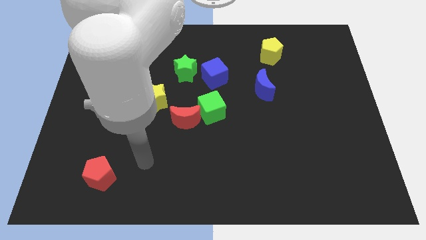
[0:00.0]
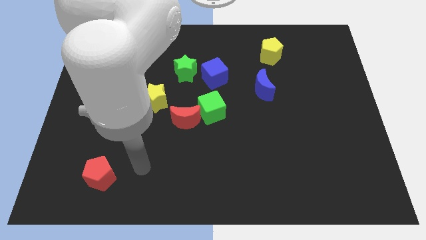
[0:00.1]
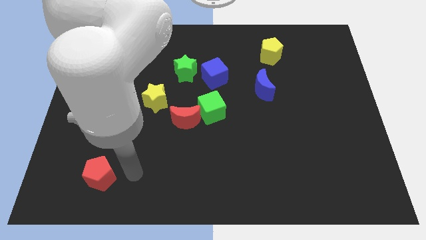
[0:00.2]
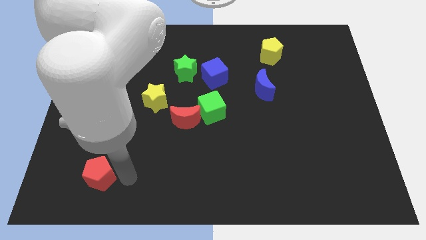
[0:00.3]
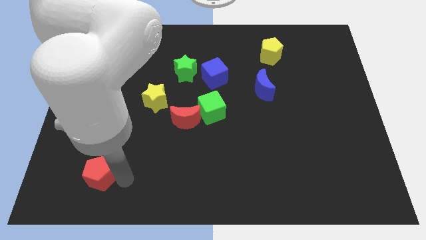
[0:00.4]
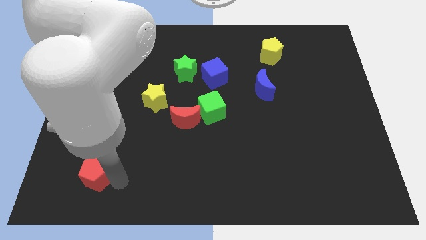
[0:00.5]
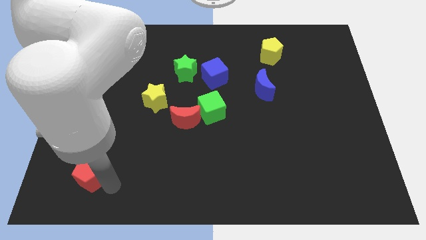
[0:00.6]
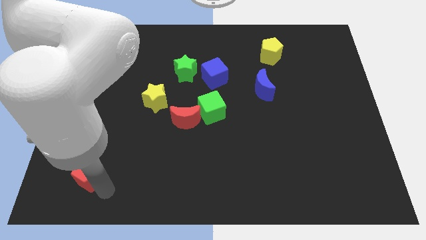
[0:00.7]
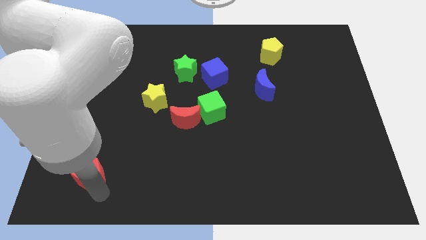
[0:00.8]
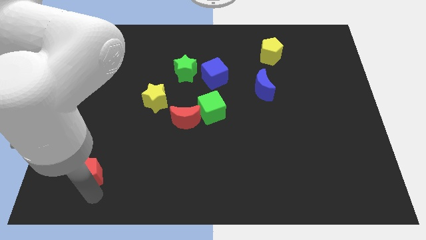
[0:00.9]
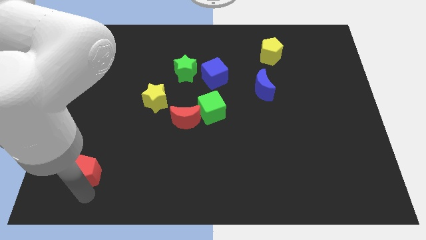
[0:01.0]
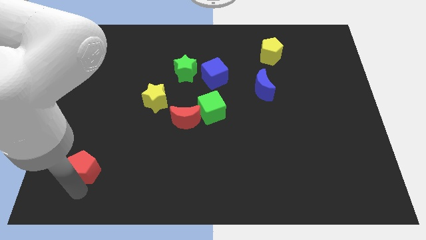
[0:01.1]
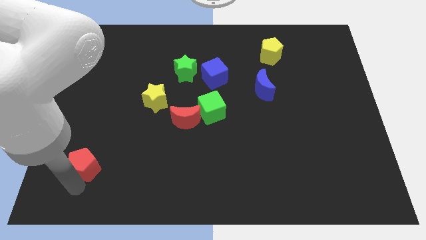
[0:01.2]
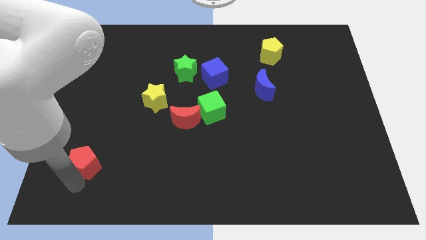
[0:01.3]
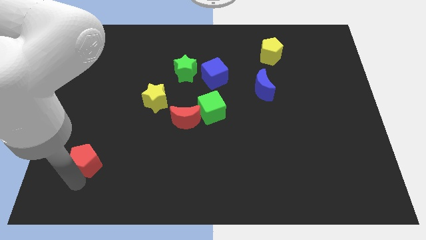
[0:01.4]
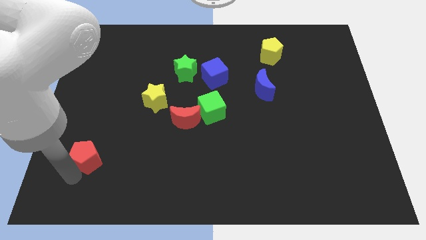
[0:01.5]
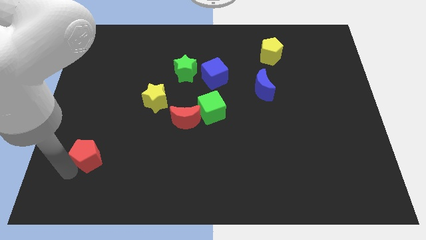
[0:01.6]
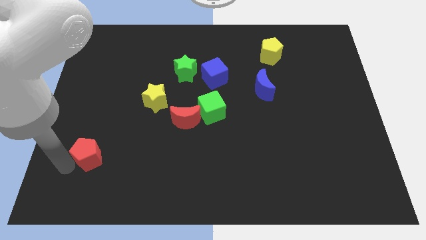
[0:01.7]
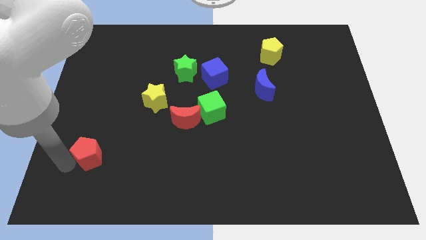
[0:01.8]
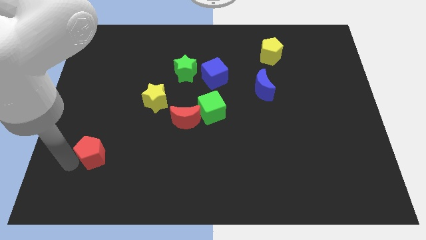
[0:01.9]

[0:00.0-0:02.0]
push the red pentagon upwards

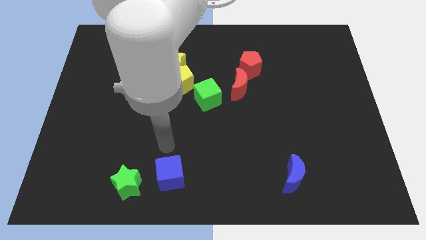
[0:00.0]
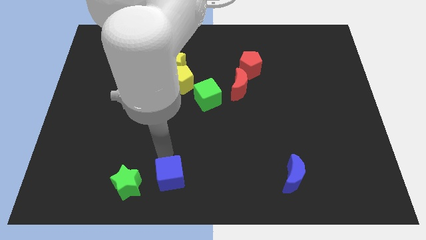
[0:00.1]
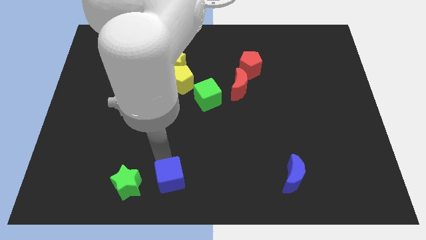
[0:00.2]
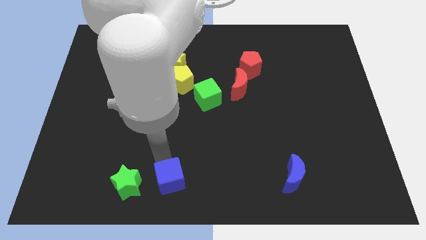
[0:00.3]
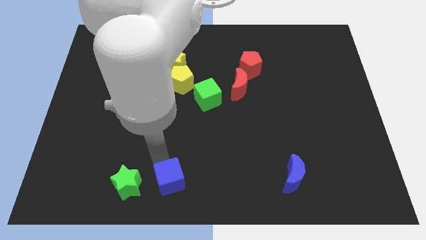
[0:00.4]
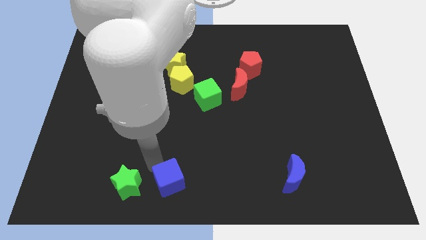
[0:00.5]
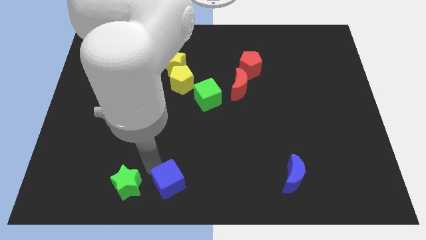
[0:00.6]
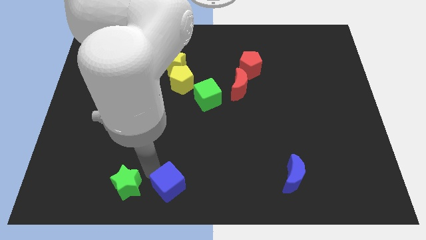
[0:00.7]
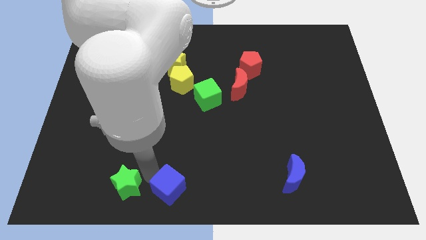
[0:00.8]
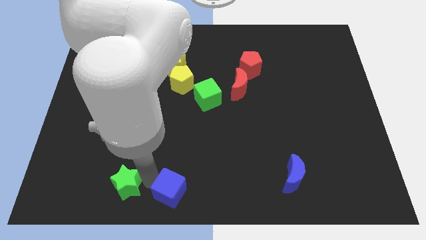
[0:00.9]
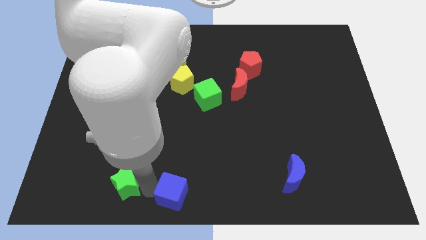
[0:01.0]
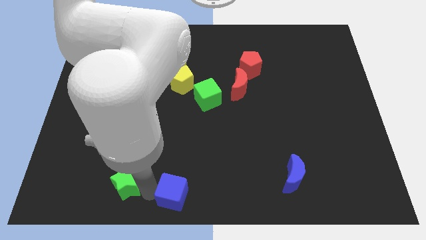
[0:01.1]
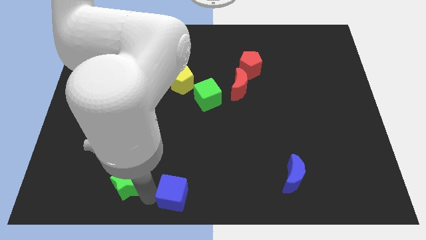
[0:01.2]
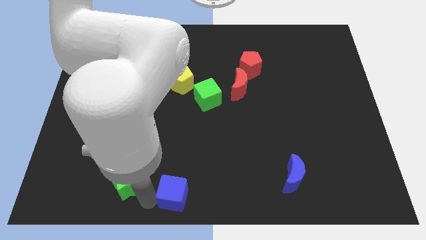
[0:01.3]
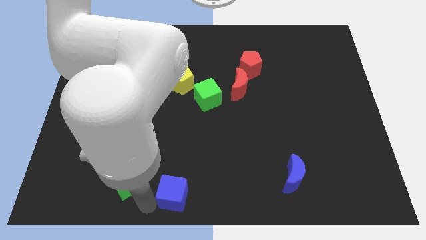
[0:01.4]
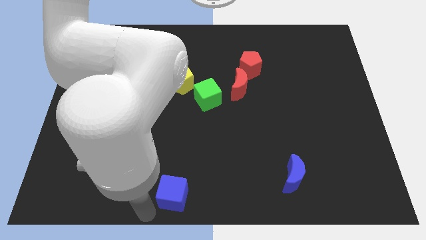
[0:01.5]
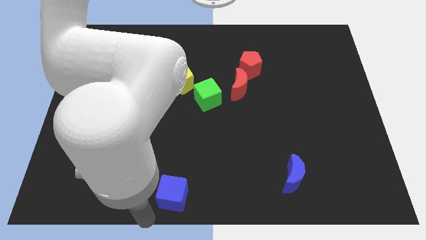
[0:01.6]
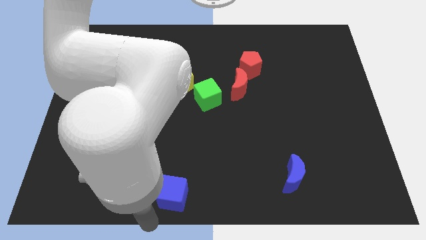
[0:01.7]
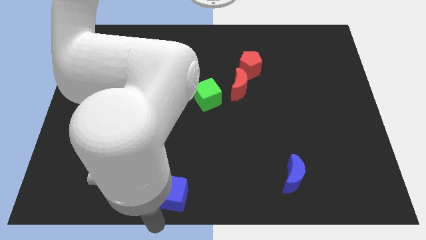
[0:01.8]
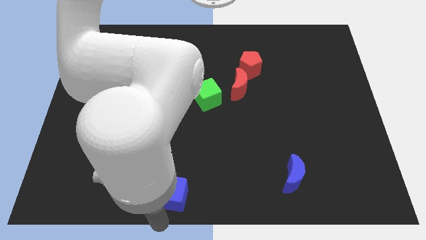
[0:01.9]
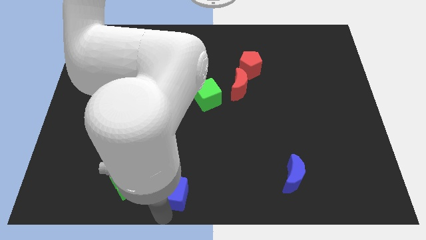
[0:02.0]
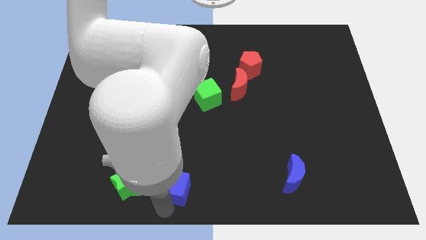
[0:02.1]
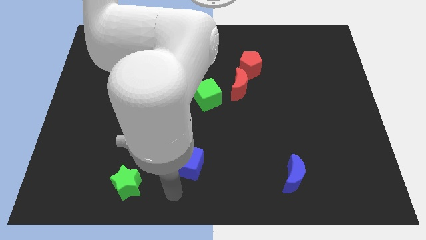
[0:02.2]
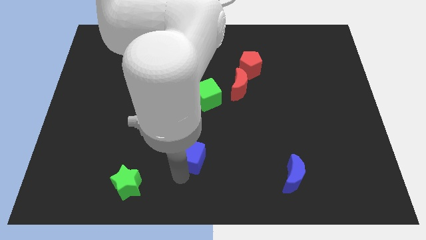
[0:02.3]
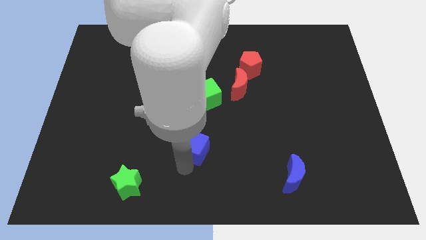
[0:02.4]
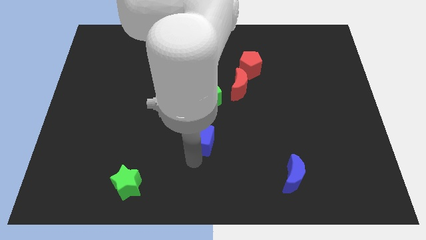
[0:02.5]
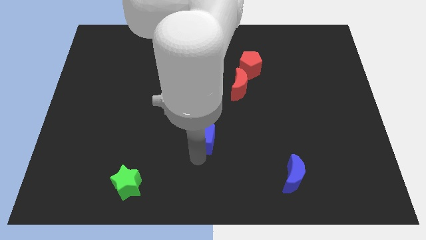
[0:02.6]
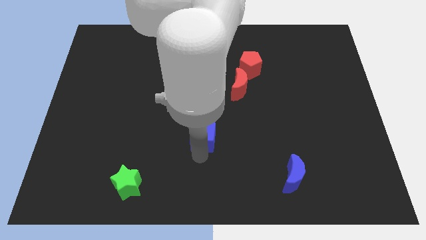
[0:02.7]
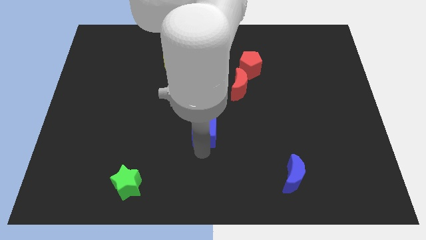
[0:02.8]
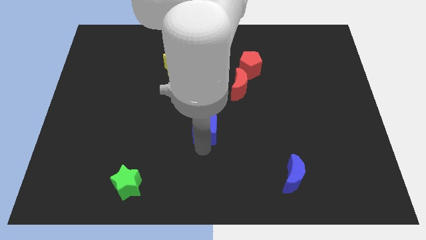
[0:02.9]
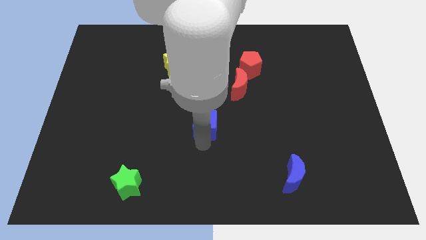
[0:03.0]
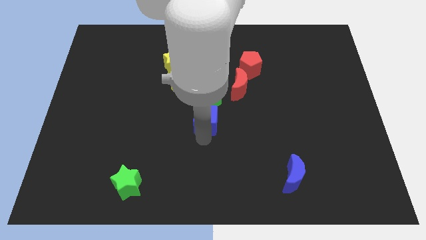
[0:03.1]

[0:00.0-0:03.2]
push the blue cube to the bottom side of the green cube

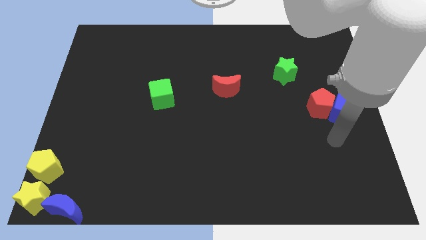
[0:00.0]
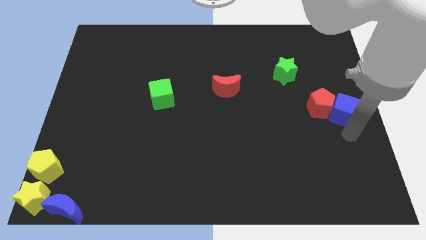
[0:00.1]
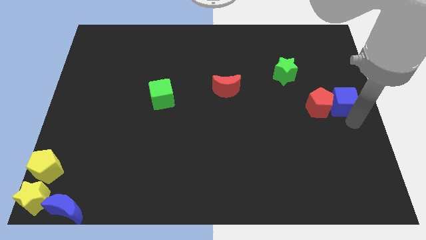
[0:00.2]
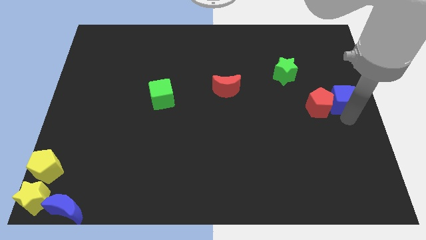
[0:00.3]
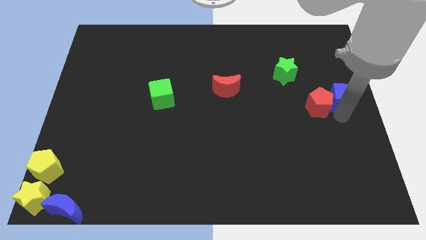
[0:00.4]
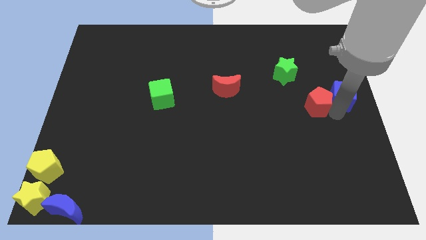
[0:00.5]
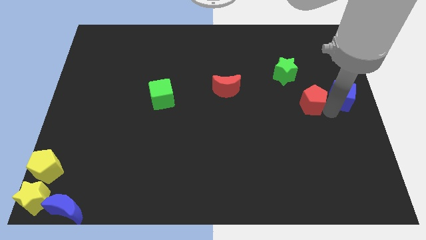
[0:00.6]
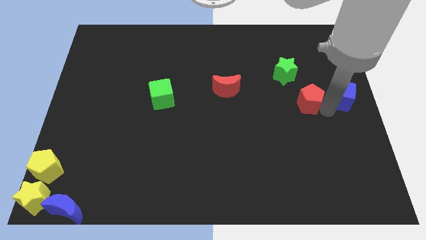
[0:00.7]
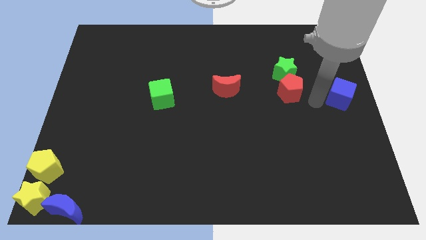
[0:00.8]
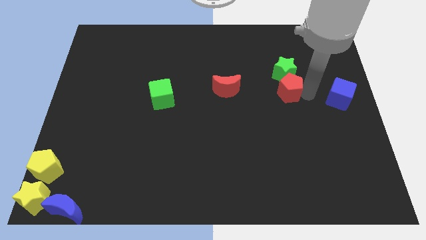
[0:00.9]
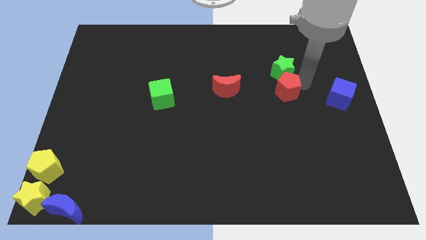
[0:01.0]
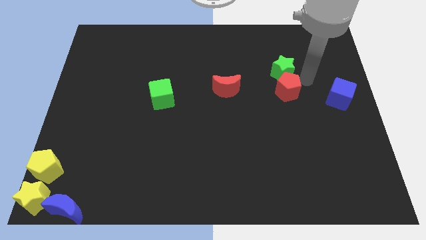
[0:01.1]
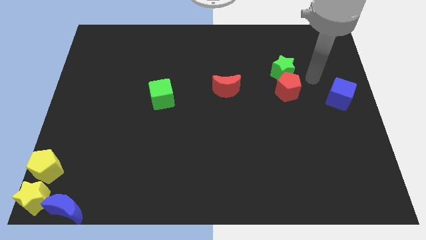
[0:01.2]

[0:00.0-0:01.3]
separate the red pentagon and blue cube

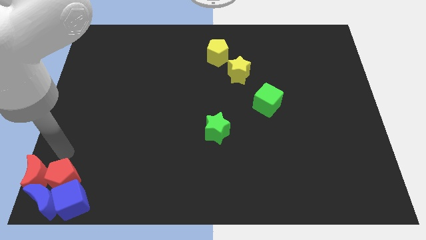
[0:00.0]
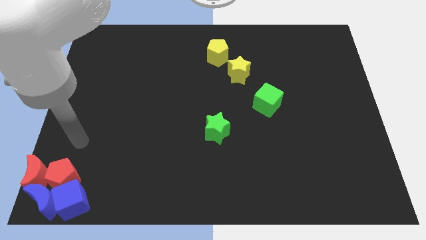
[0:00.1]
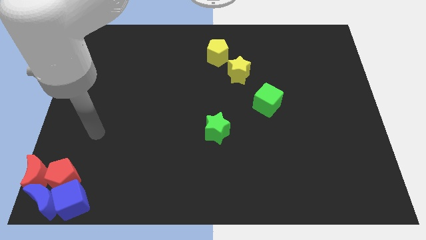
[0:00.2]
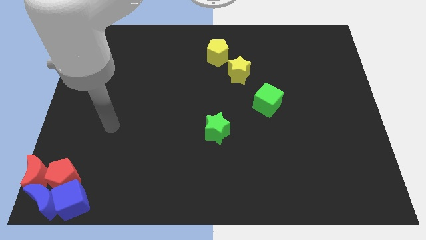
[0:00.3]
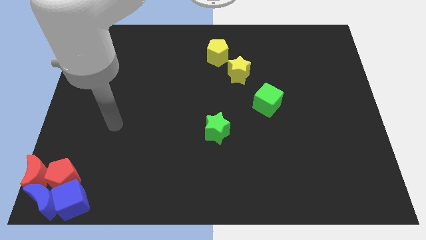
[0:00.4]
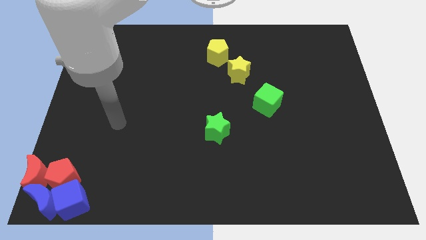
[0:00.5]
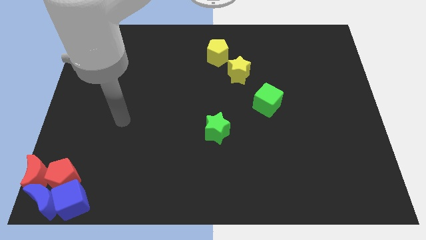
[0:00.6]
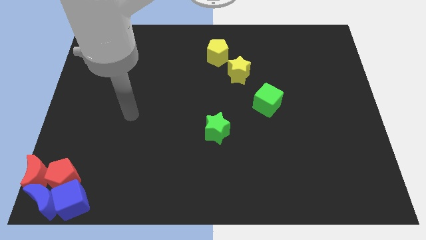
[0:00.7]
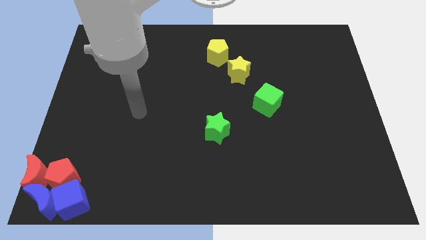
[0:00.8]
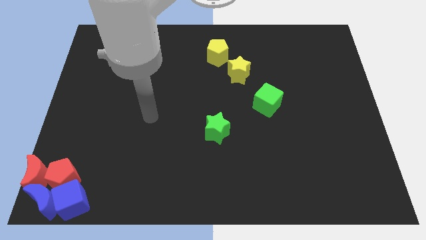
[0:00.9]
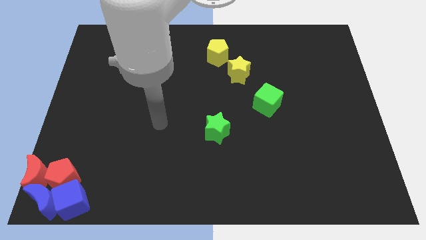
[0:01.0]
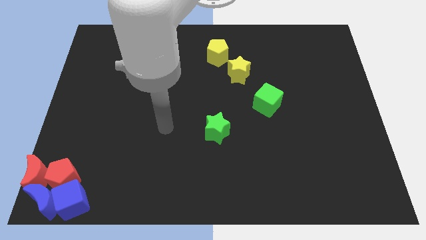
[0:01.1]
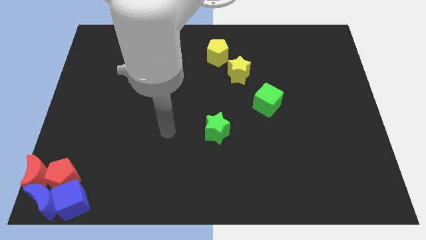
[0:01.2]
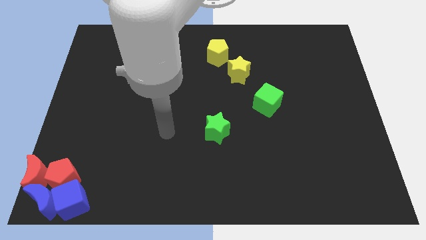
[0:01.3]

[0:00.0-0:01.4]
move your arm away from red pentagon

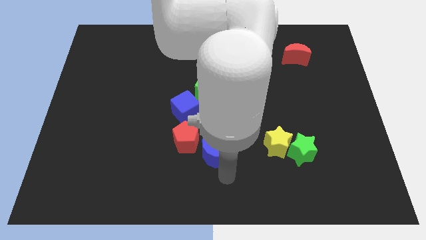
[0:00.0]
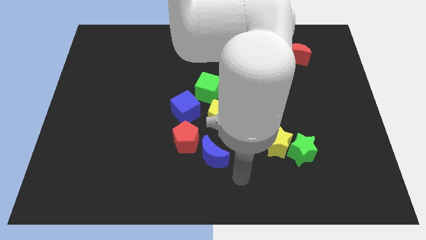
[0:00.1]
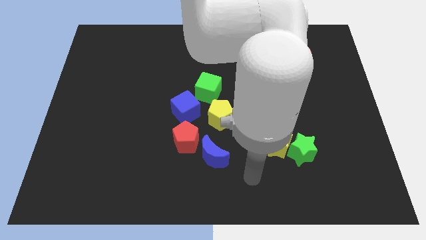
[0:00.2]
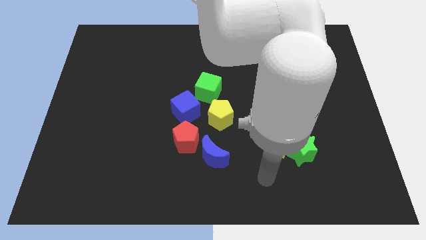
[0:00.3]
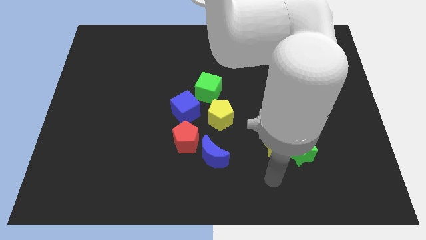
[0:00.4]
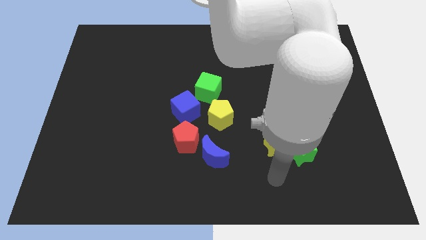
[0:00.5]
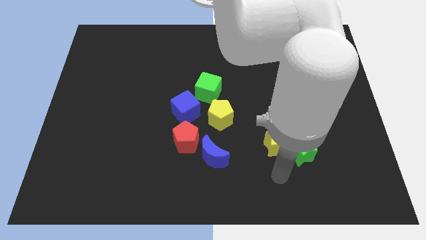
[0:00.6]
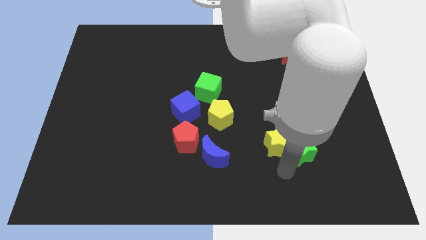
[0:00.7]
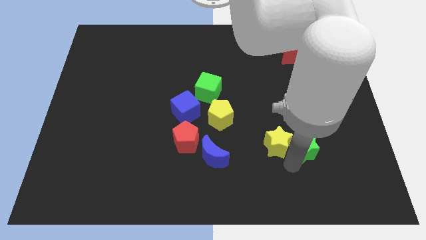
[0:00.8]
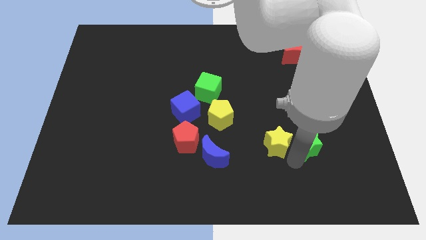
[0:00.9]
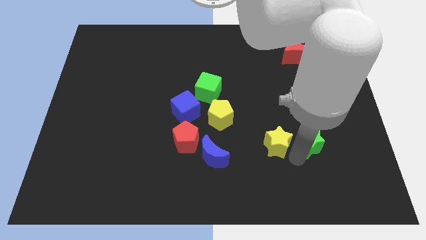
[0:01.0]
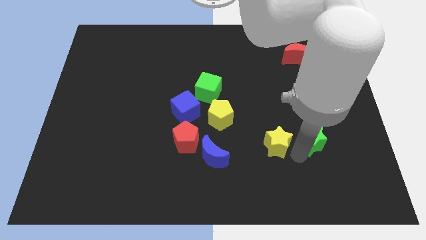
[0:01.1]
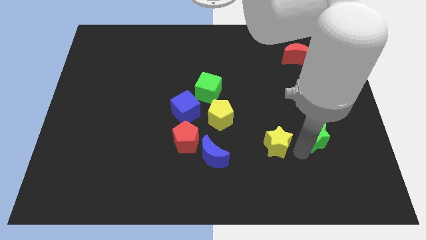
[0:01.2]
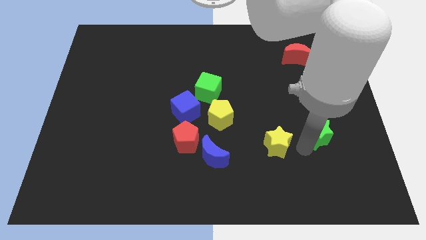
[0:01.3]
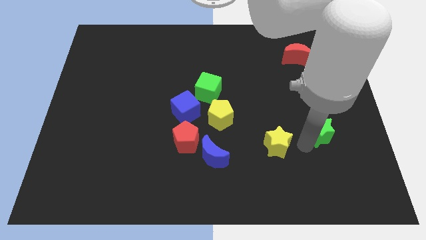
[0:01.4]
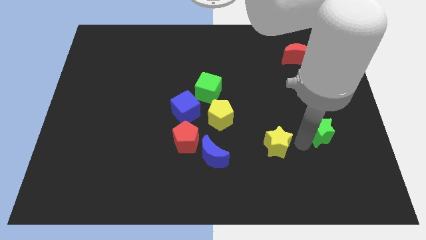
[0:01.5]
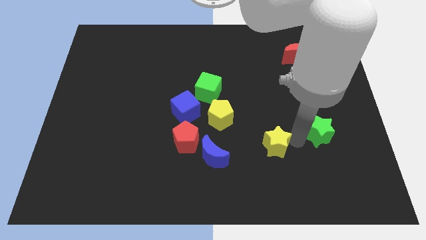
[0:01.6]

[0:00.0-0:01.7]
place your arm in between the green star and yellow star
